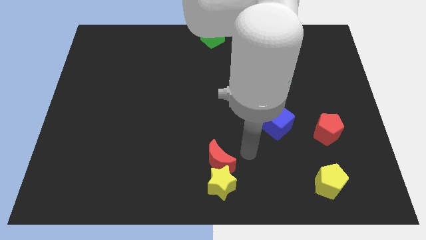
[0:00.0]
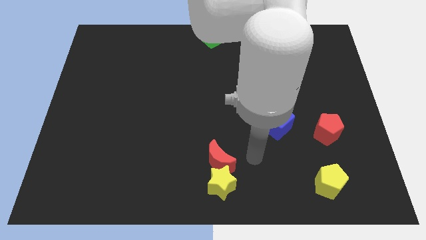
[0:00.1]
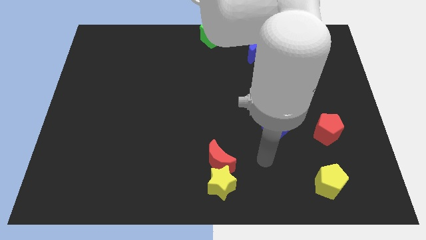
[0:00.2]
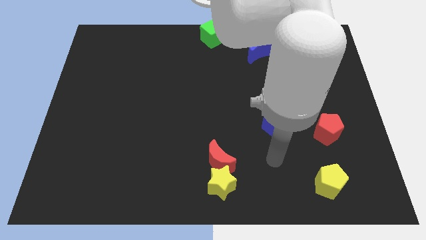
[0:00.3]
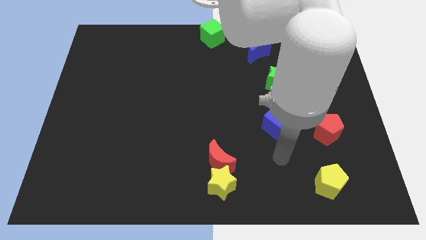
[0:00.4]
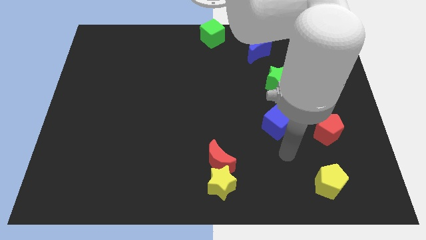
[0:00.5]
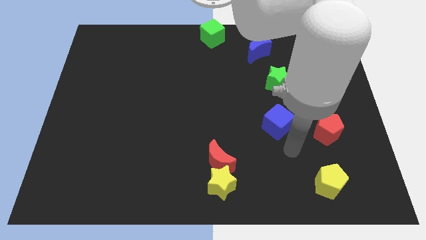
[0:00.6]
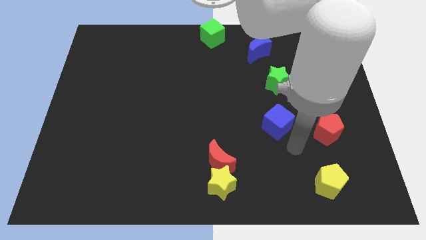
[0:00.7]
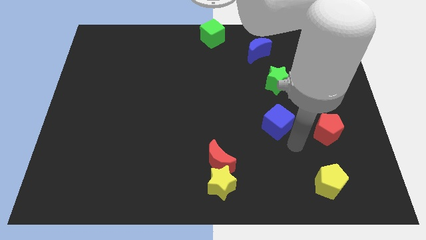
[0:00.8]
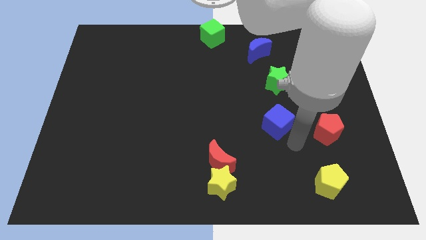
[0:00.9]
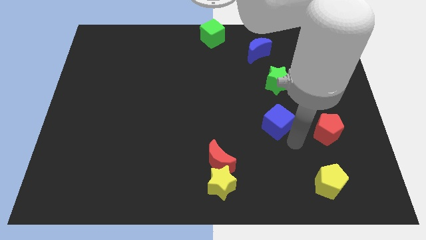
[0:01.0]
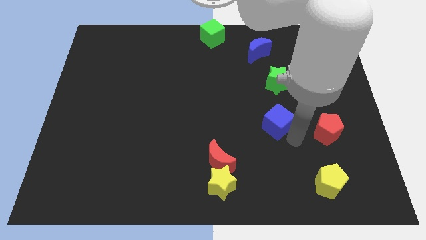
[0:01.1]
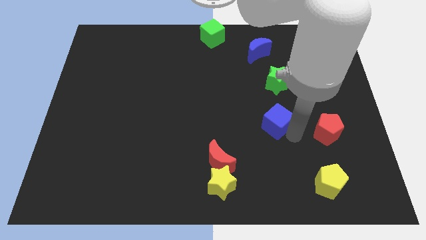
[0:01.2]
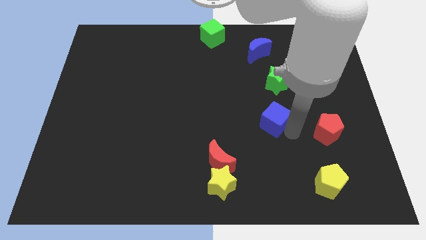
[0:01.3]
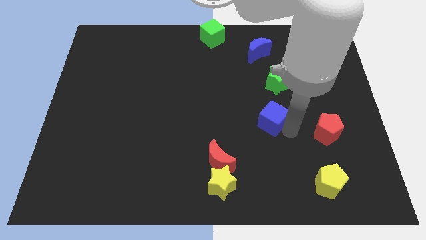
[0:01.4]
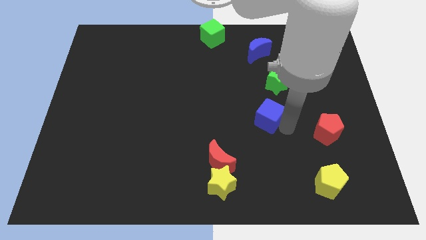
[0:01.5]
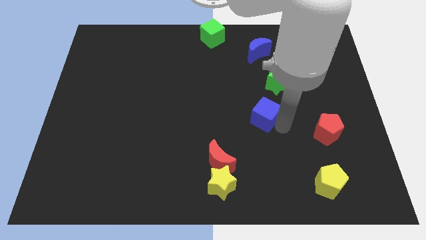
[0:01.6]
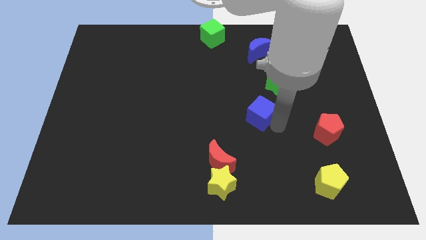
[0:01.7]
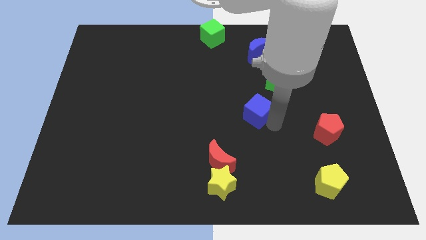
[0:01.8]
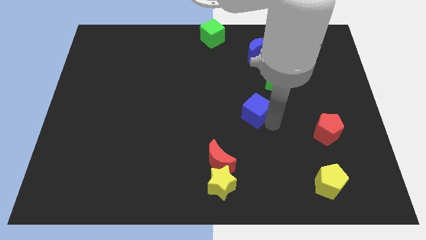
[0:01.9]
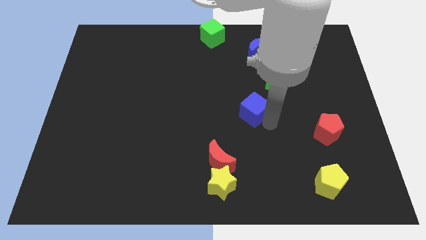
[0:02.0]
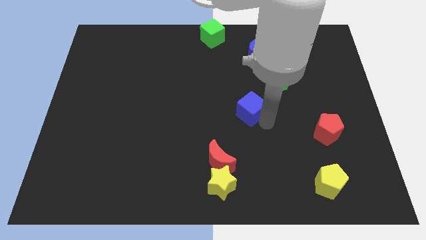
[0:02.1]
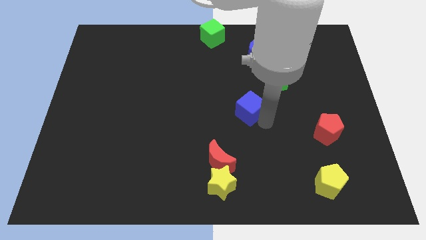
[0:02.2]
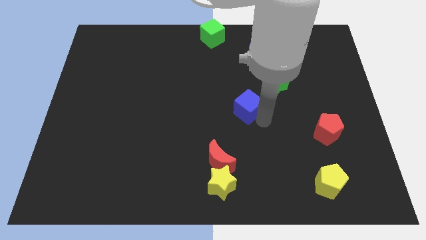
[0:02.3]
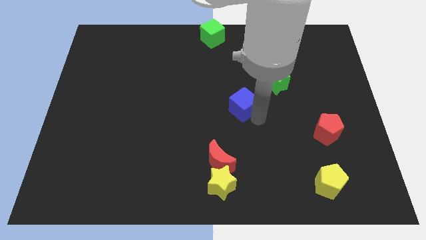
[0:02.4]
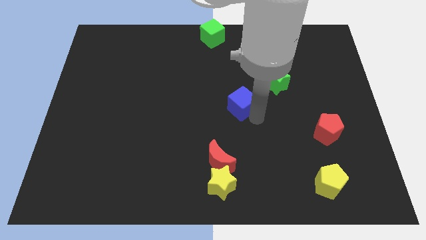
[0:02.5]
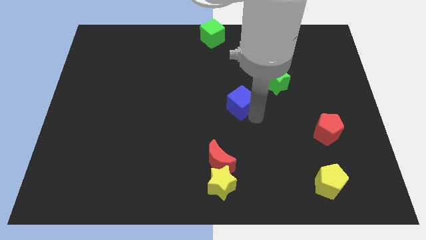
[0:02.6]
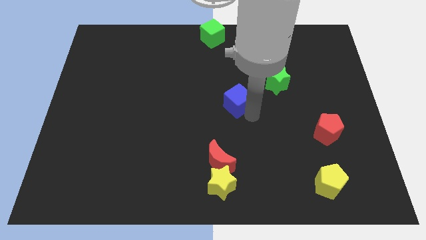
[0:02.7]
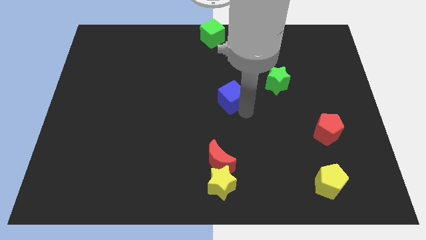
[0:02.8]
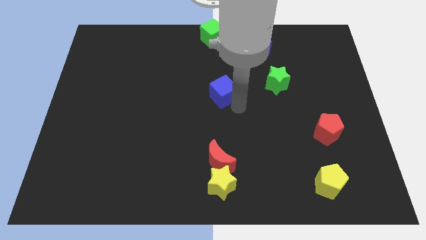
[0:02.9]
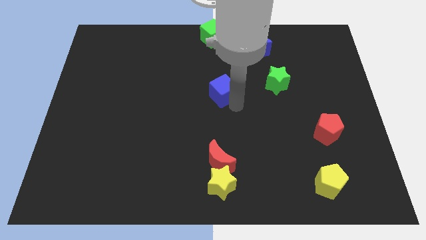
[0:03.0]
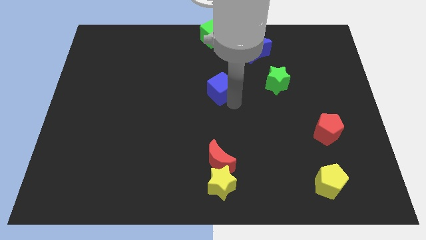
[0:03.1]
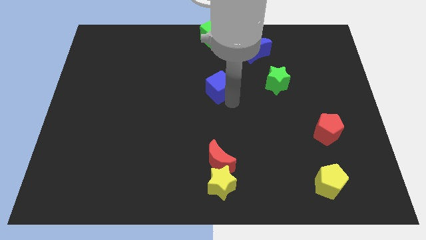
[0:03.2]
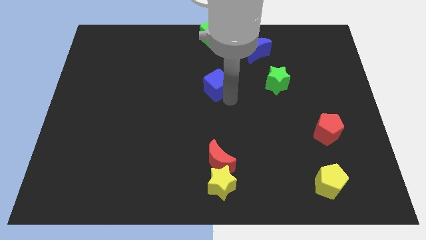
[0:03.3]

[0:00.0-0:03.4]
place the blue cube in between the red moon and green cube

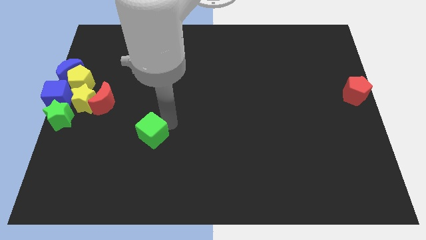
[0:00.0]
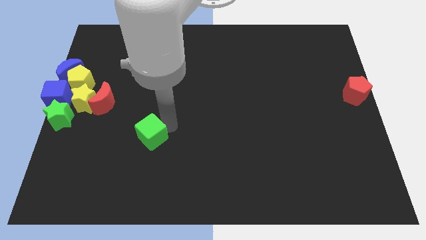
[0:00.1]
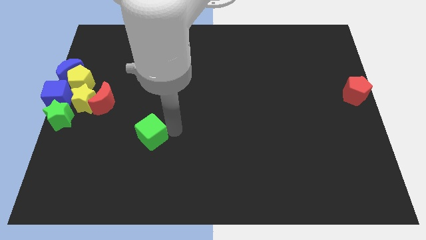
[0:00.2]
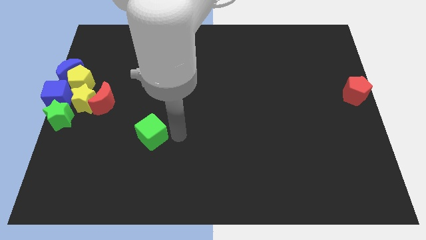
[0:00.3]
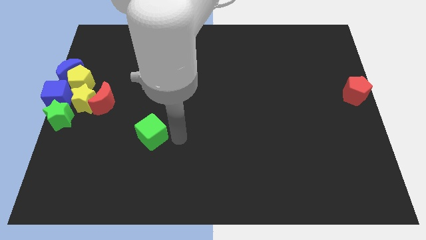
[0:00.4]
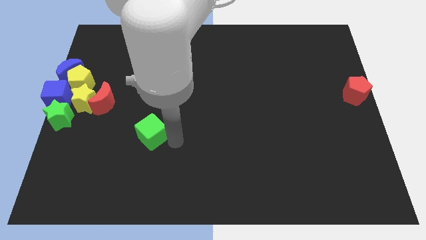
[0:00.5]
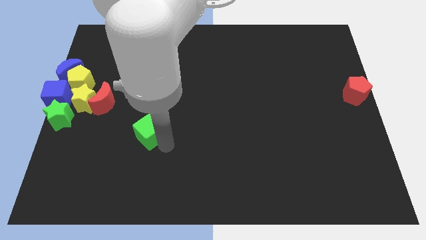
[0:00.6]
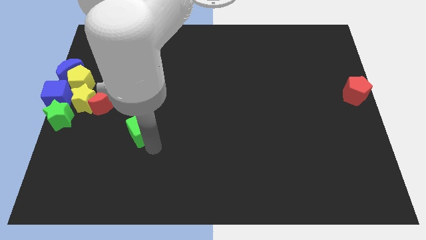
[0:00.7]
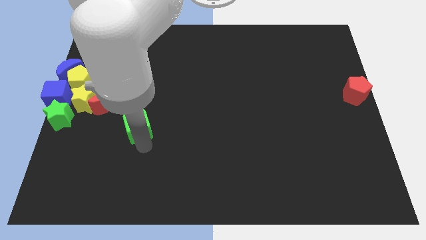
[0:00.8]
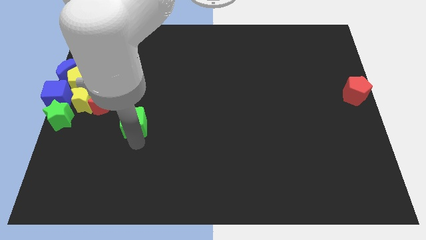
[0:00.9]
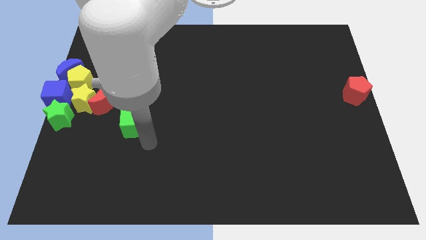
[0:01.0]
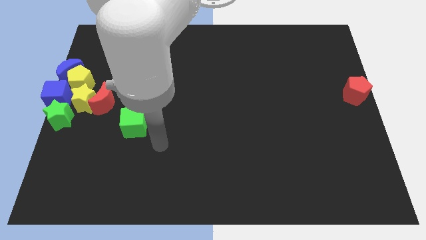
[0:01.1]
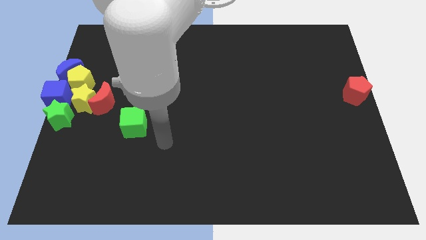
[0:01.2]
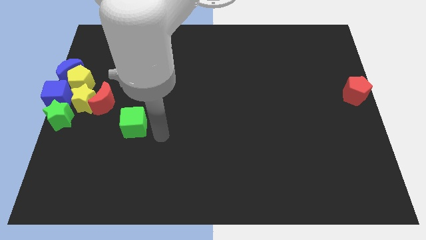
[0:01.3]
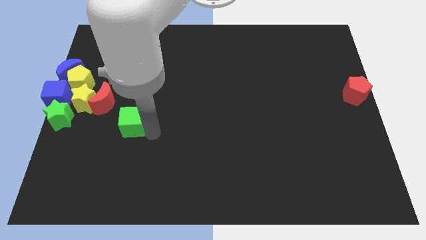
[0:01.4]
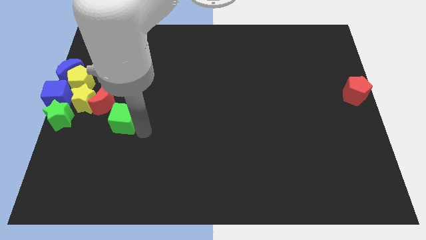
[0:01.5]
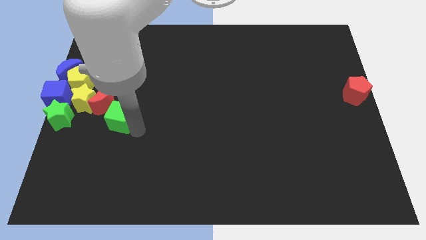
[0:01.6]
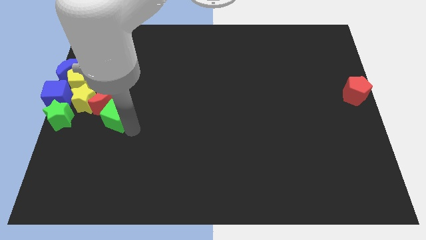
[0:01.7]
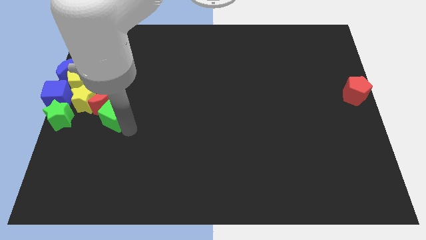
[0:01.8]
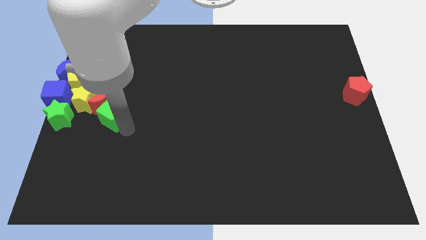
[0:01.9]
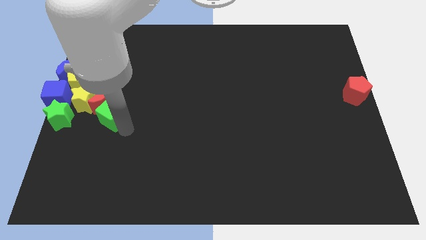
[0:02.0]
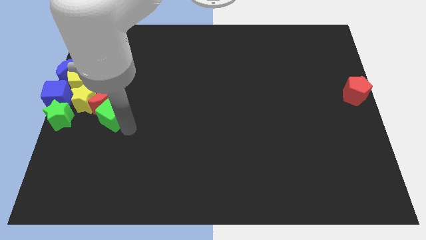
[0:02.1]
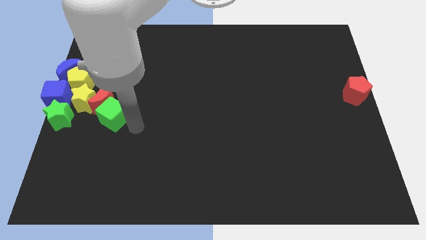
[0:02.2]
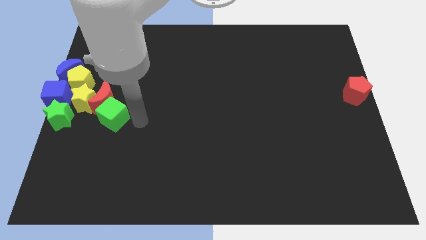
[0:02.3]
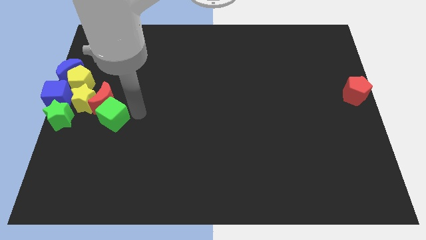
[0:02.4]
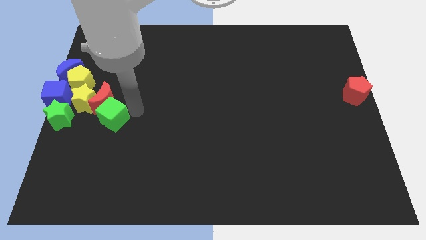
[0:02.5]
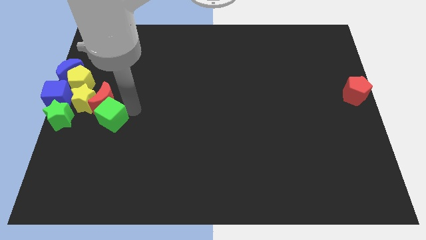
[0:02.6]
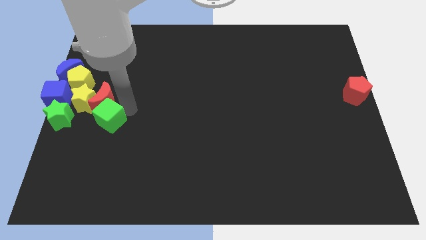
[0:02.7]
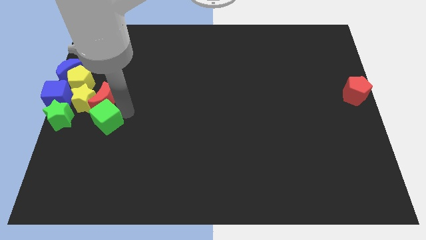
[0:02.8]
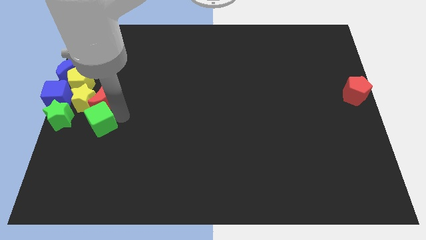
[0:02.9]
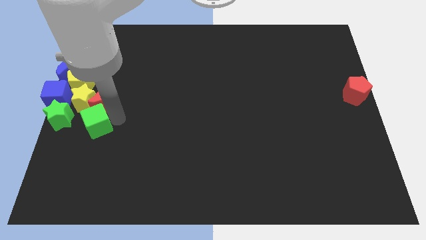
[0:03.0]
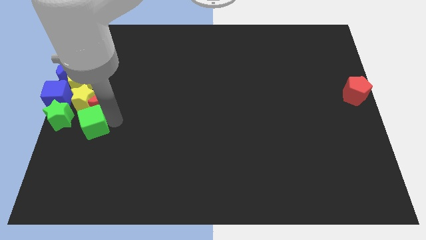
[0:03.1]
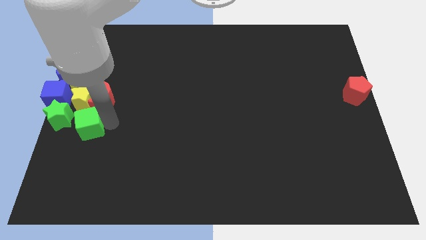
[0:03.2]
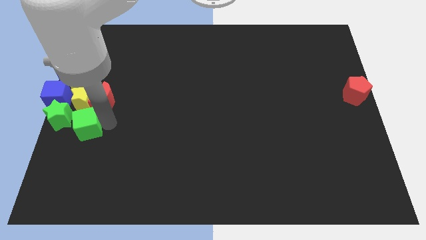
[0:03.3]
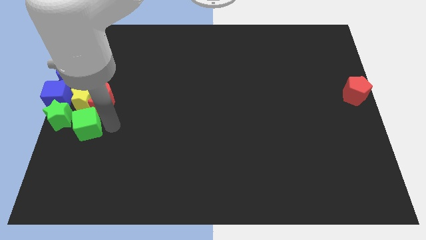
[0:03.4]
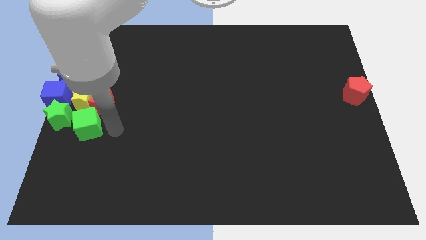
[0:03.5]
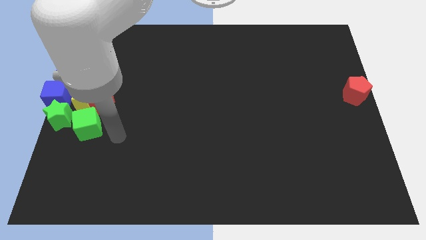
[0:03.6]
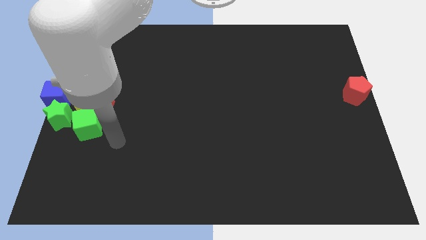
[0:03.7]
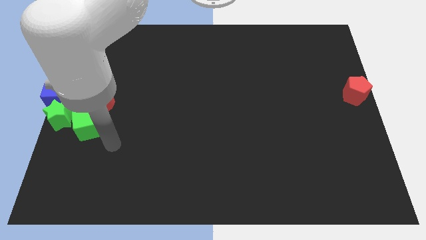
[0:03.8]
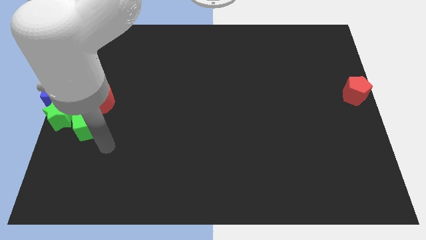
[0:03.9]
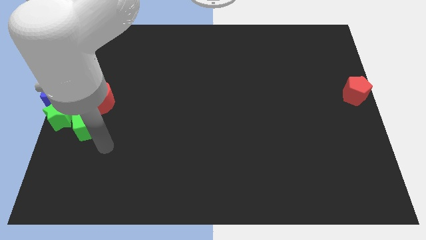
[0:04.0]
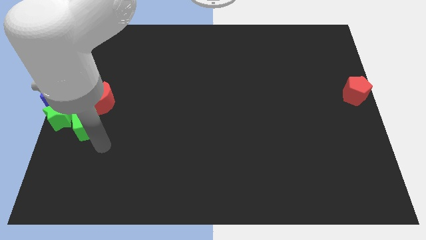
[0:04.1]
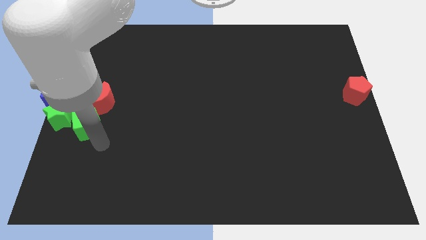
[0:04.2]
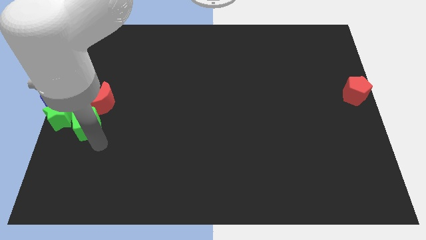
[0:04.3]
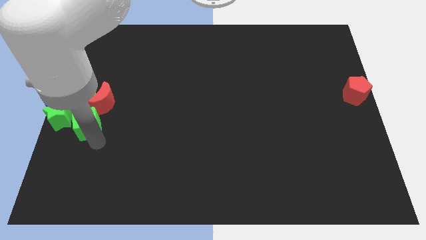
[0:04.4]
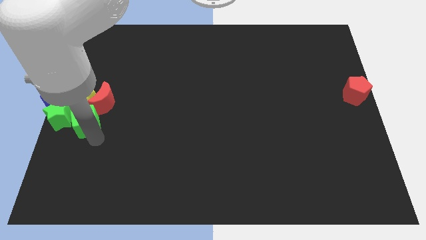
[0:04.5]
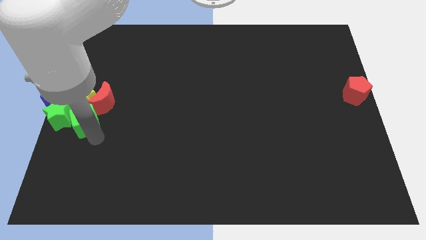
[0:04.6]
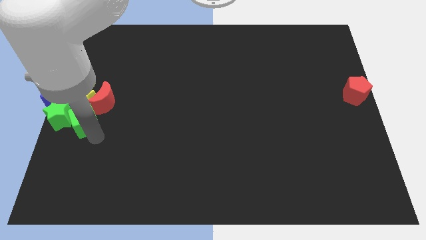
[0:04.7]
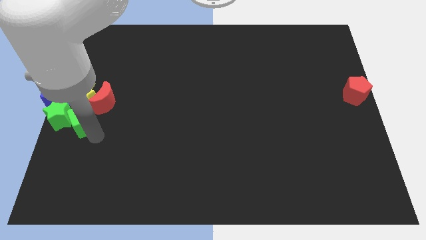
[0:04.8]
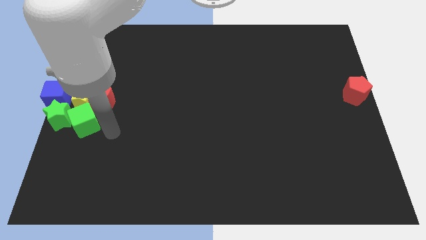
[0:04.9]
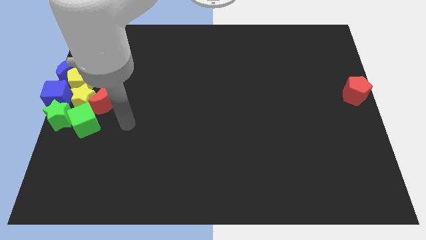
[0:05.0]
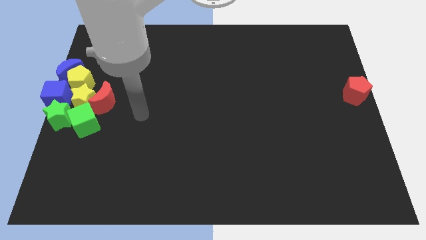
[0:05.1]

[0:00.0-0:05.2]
place the green cube to the right of the green star
